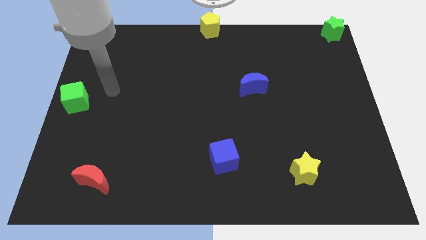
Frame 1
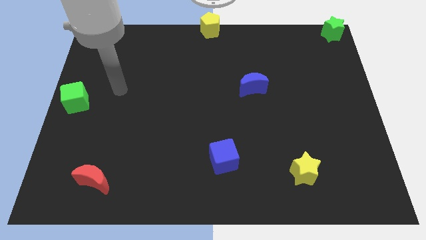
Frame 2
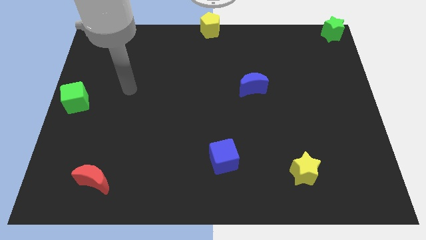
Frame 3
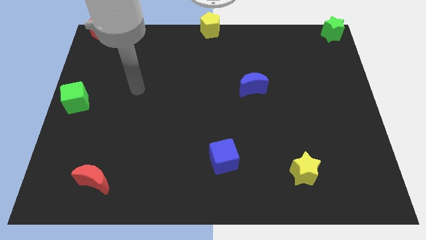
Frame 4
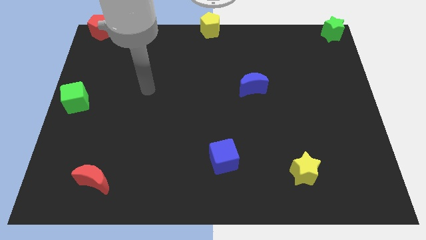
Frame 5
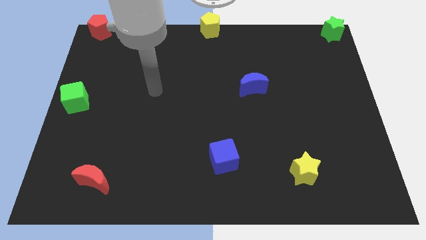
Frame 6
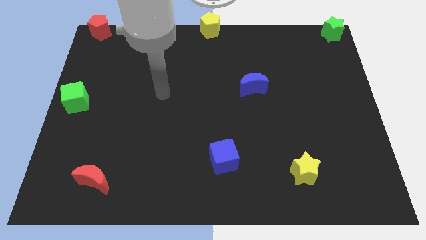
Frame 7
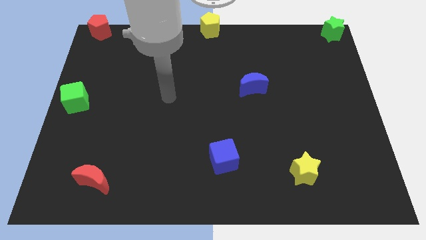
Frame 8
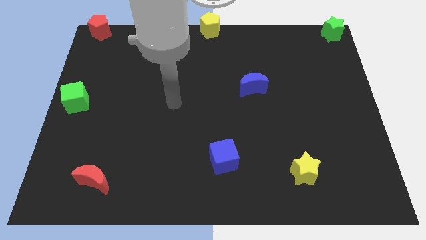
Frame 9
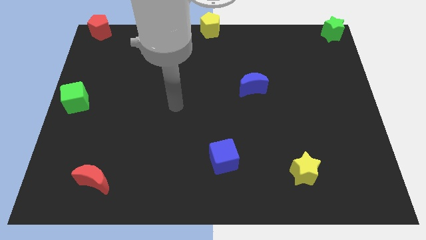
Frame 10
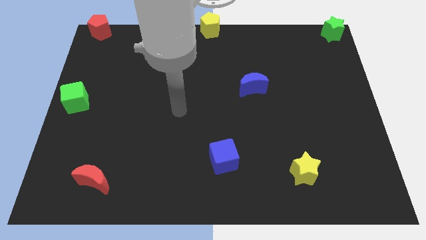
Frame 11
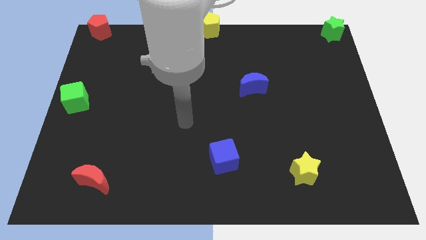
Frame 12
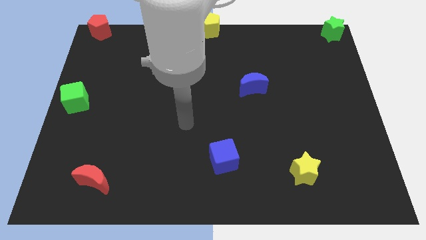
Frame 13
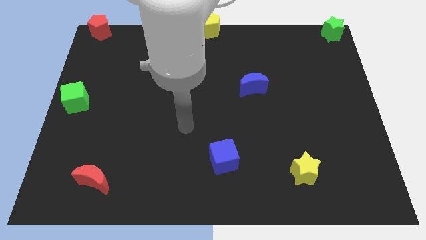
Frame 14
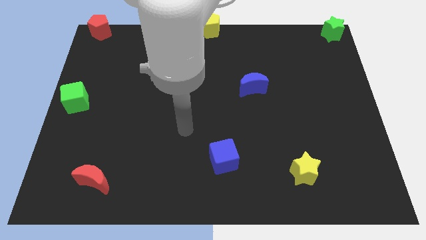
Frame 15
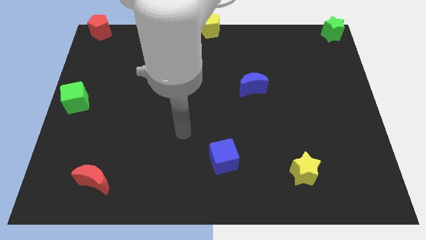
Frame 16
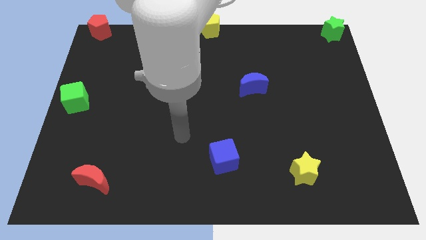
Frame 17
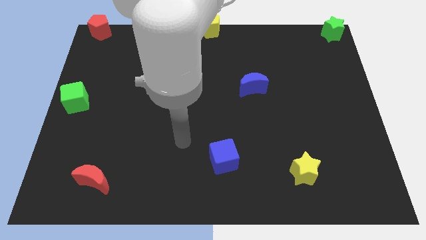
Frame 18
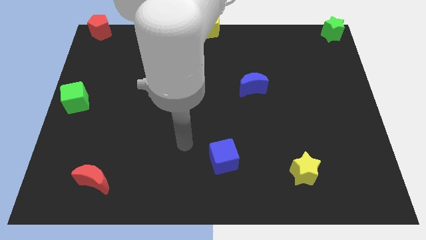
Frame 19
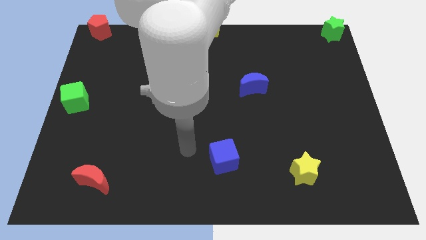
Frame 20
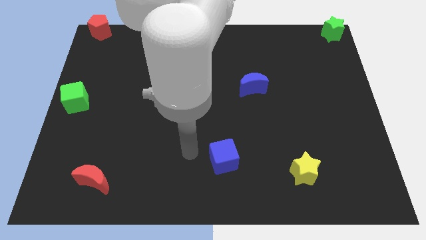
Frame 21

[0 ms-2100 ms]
move your arm towards the bottom side of the board

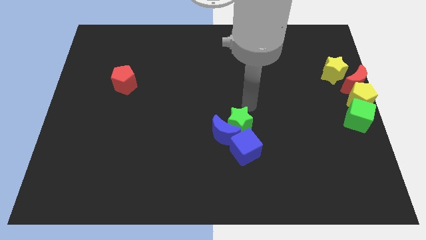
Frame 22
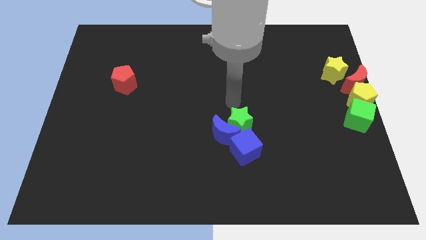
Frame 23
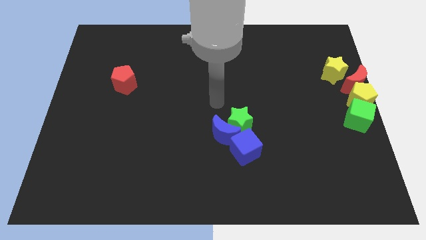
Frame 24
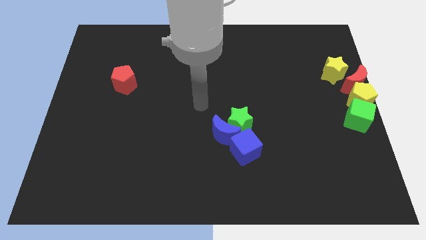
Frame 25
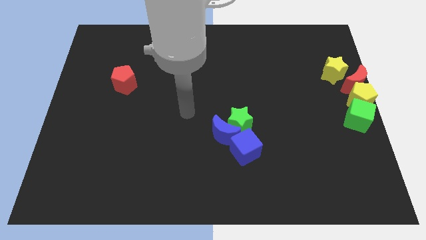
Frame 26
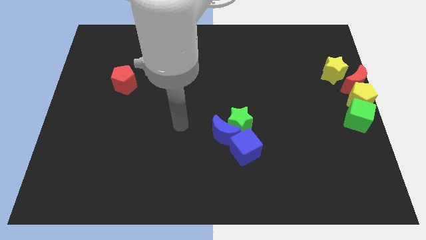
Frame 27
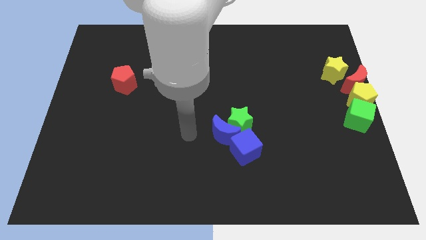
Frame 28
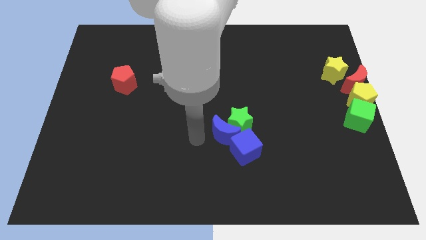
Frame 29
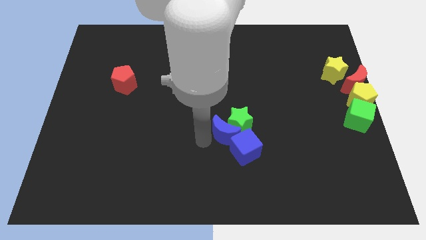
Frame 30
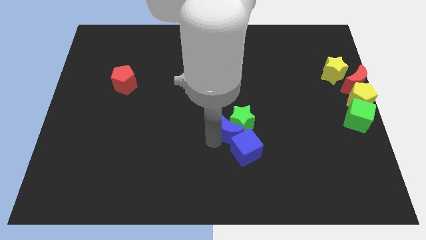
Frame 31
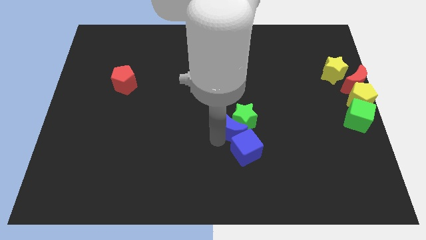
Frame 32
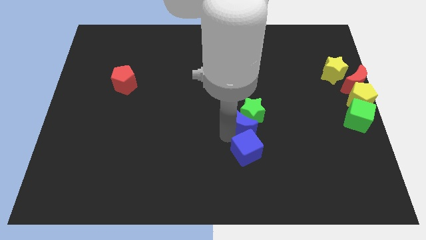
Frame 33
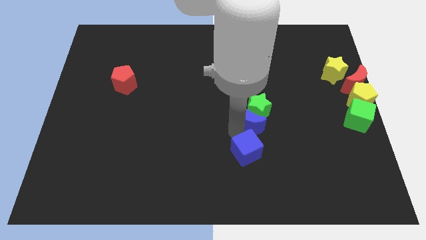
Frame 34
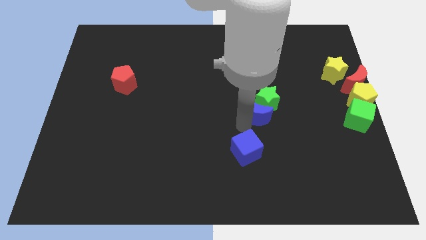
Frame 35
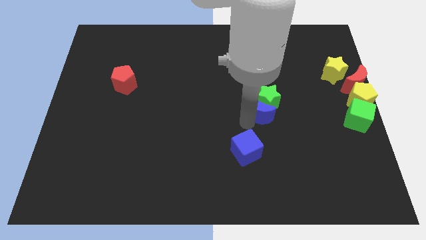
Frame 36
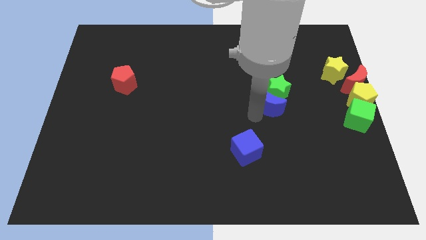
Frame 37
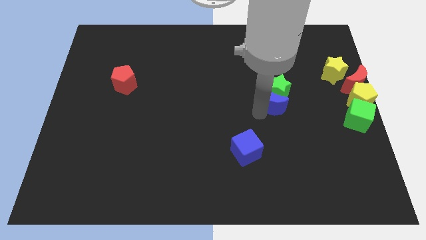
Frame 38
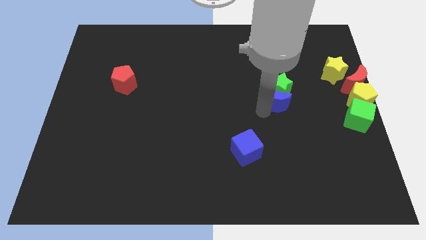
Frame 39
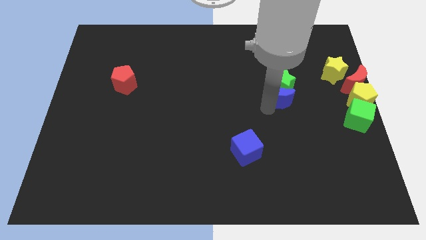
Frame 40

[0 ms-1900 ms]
drag the green star and blue crescent towards the top right side of the board

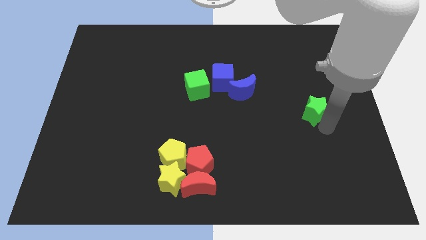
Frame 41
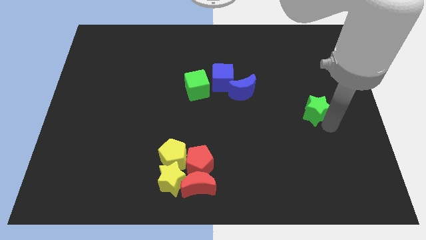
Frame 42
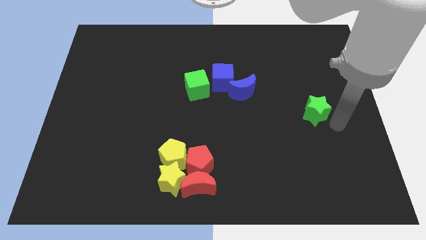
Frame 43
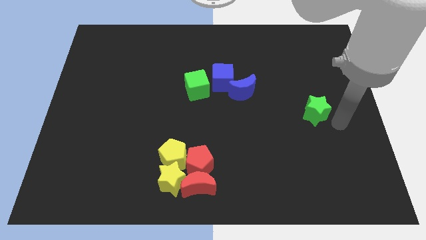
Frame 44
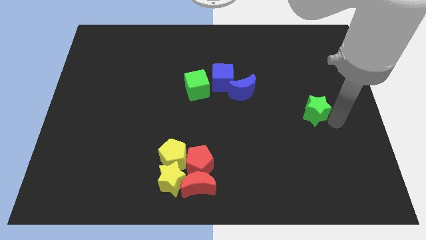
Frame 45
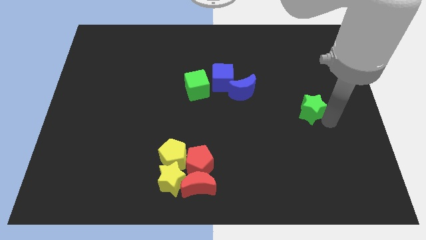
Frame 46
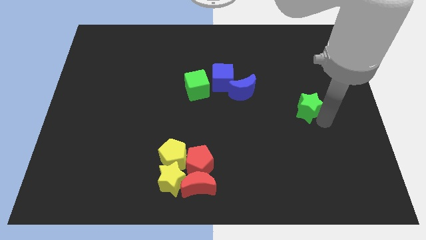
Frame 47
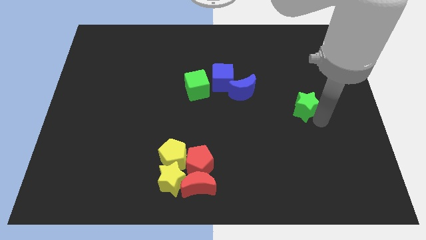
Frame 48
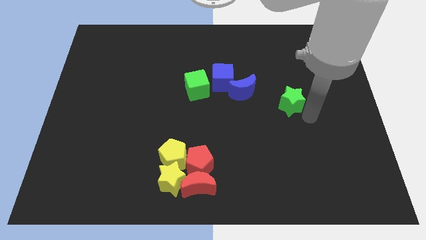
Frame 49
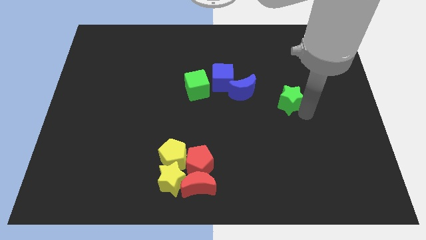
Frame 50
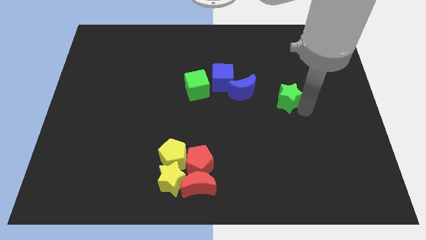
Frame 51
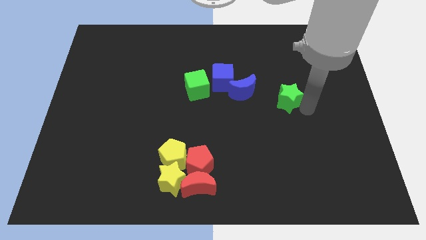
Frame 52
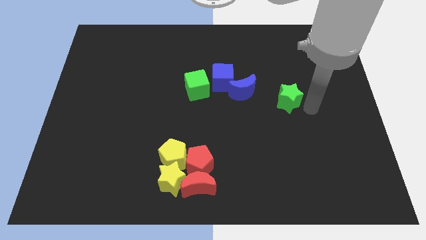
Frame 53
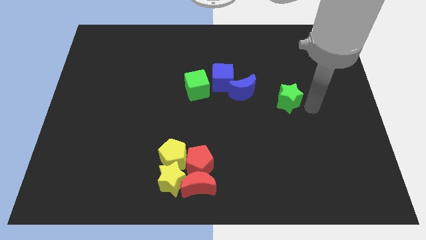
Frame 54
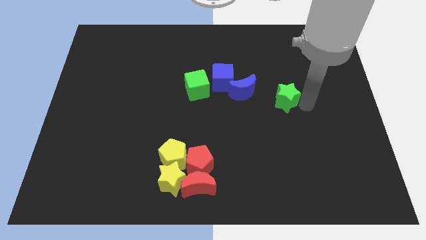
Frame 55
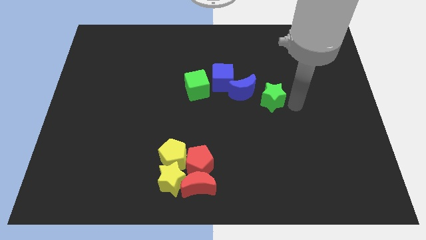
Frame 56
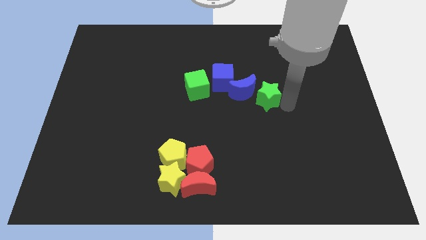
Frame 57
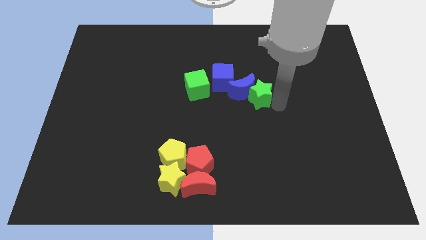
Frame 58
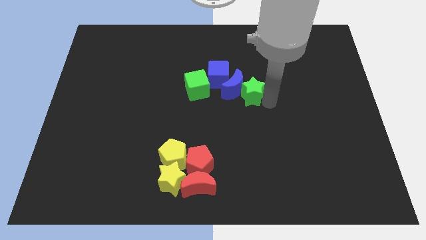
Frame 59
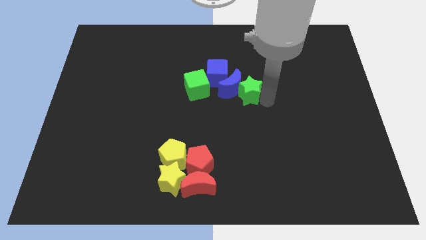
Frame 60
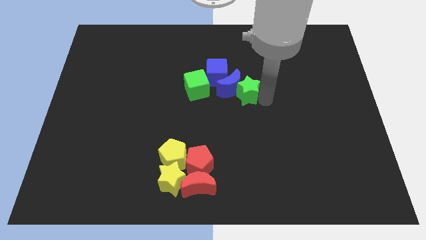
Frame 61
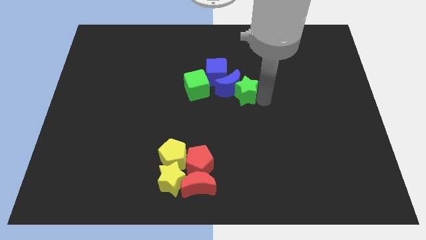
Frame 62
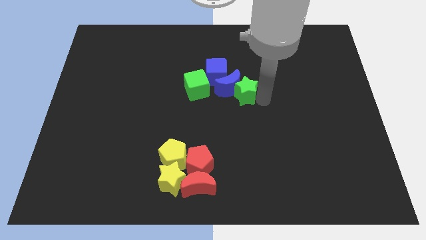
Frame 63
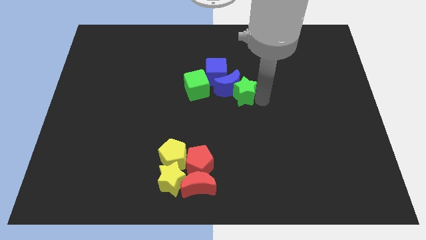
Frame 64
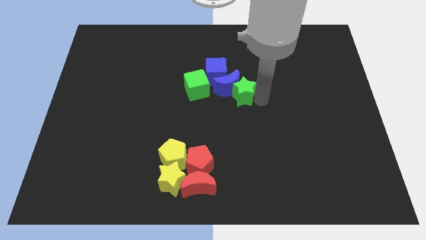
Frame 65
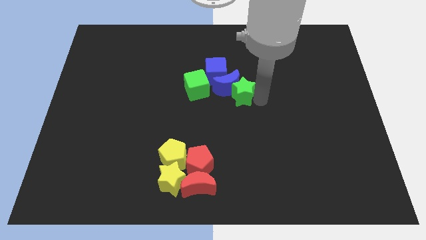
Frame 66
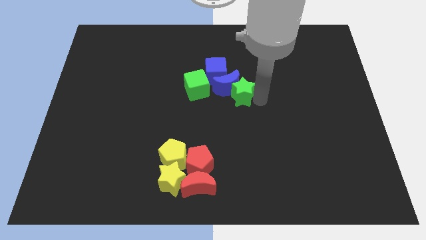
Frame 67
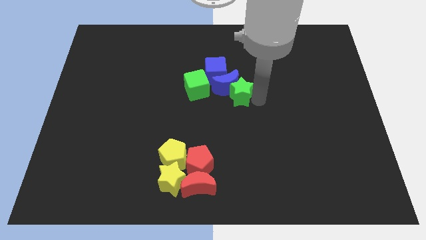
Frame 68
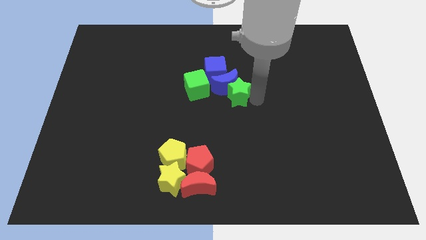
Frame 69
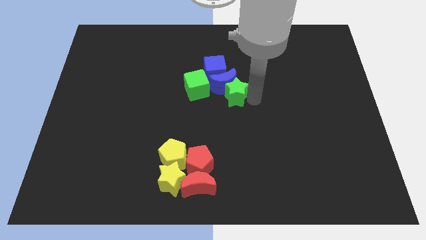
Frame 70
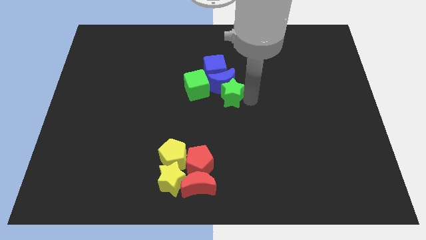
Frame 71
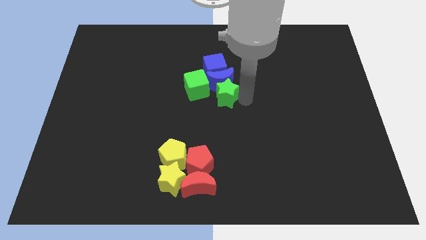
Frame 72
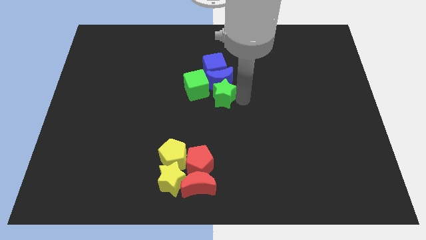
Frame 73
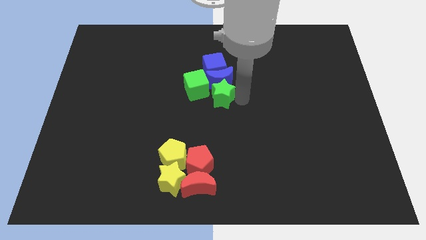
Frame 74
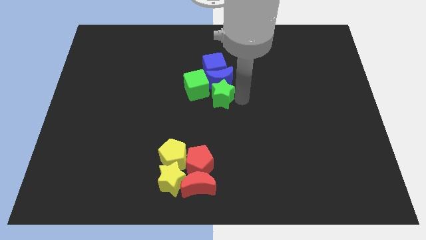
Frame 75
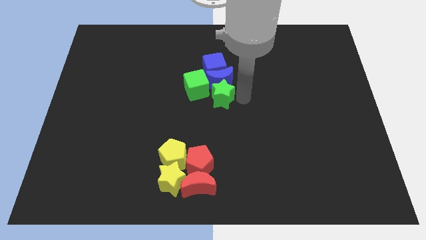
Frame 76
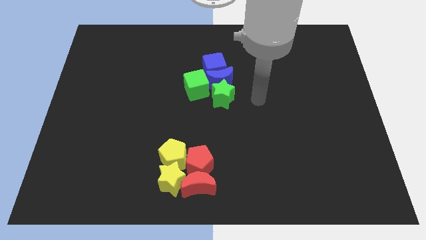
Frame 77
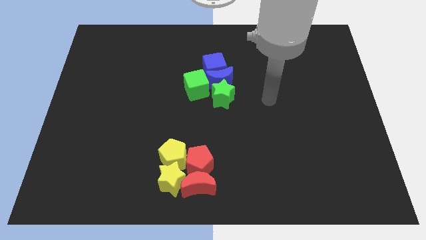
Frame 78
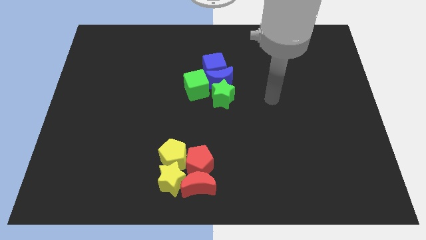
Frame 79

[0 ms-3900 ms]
push the blue blocks with the green star

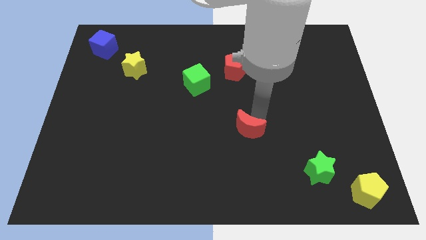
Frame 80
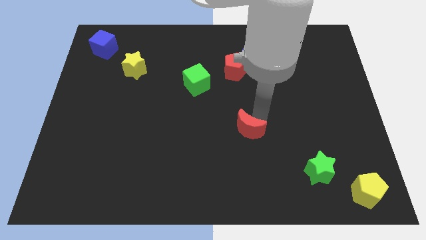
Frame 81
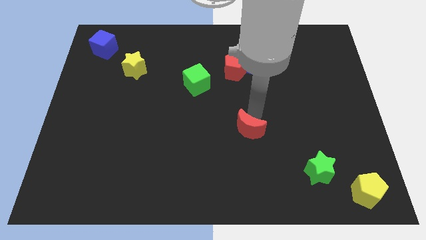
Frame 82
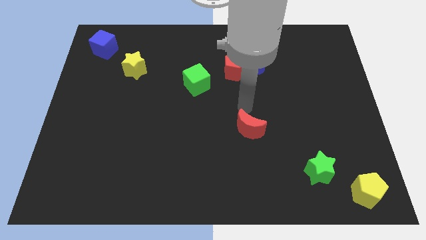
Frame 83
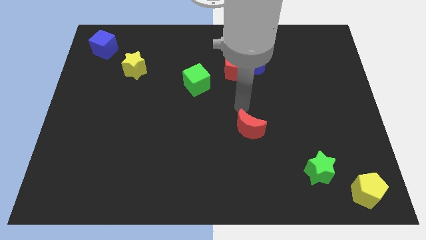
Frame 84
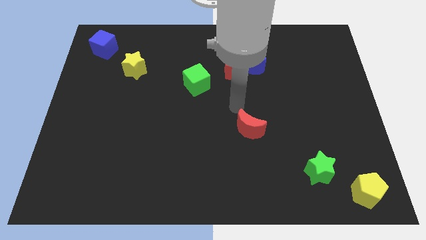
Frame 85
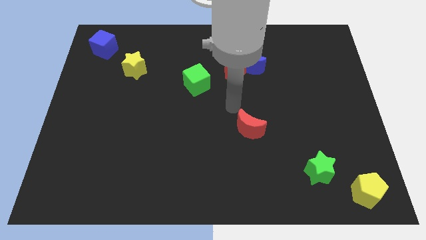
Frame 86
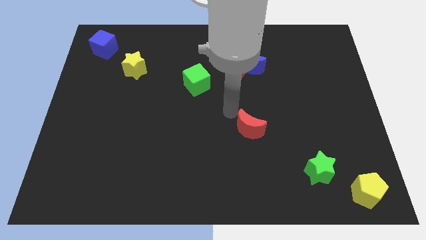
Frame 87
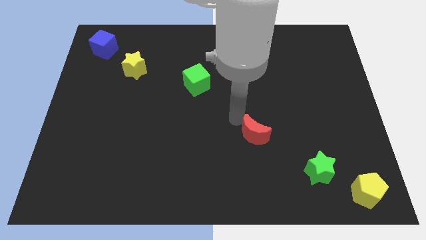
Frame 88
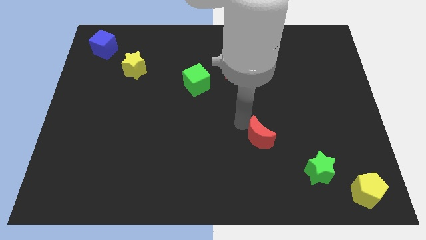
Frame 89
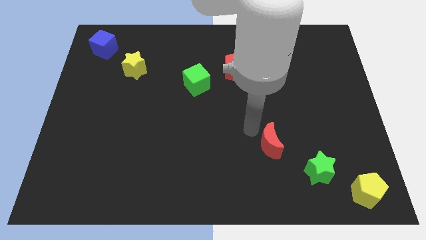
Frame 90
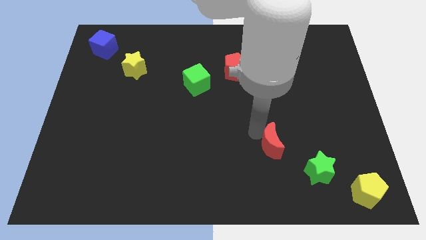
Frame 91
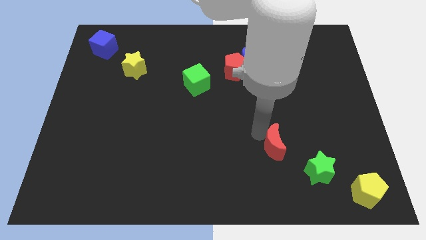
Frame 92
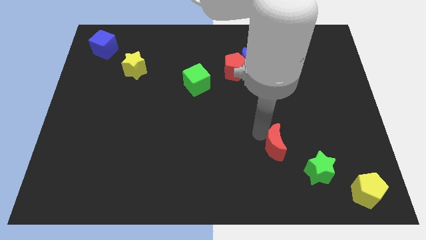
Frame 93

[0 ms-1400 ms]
push the red crescent to the bottom of the board
